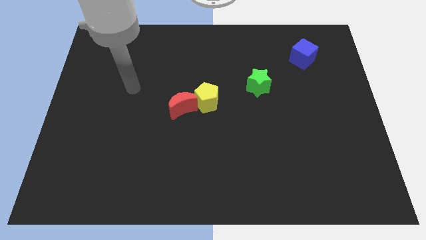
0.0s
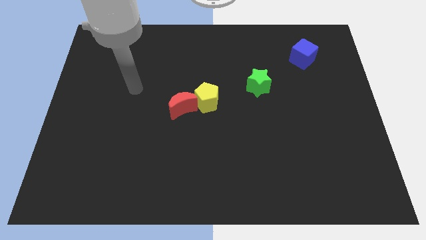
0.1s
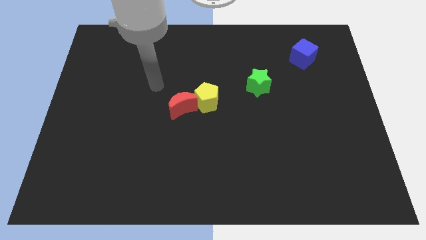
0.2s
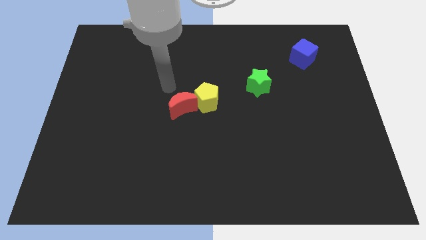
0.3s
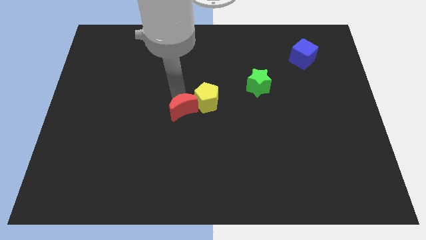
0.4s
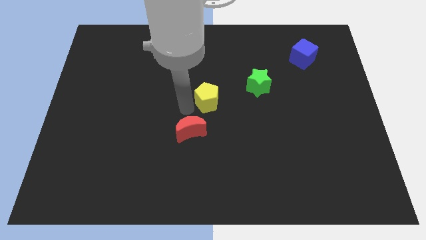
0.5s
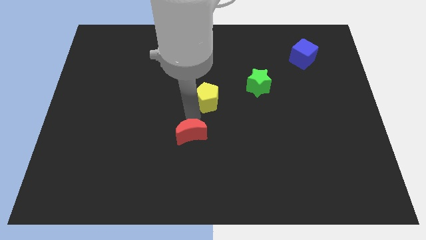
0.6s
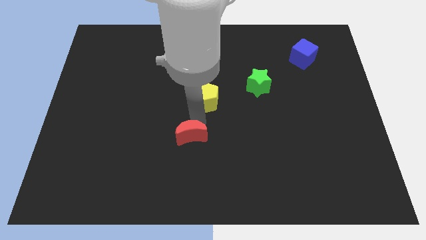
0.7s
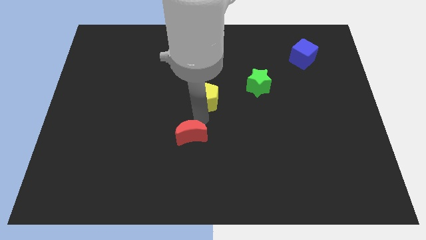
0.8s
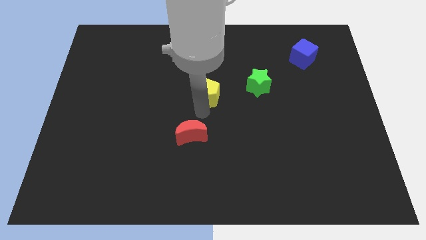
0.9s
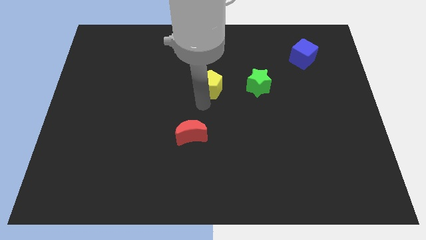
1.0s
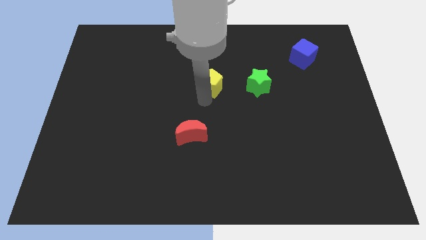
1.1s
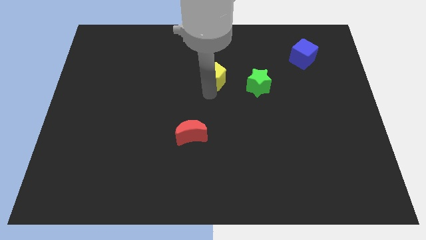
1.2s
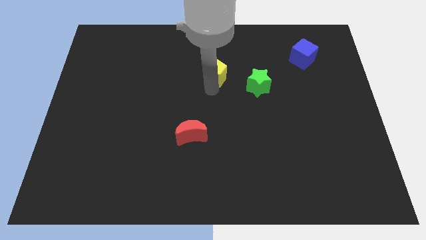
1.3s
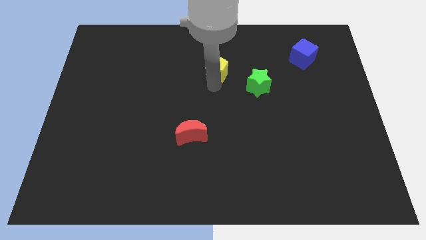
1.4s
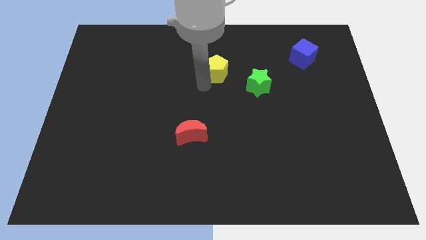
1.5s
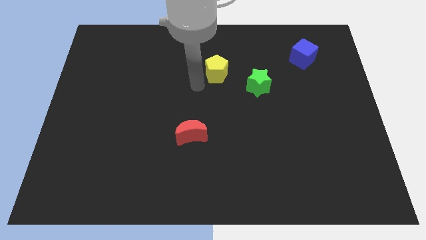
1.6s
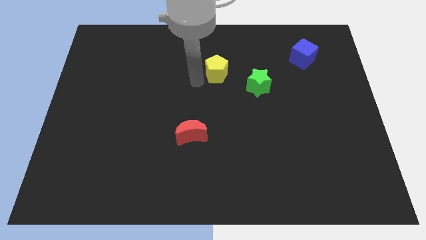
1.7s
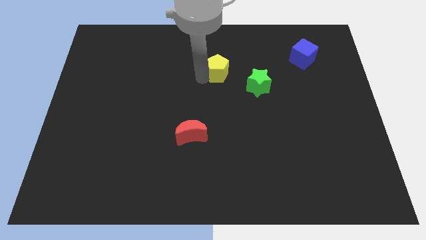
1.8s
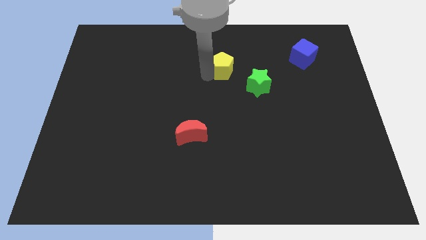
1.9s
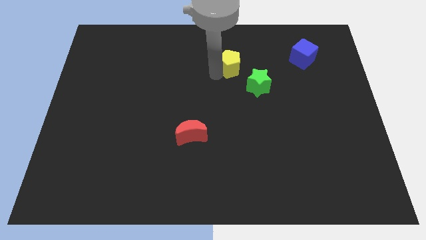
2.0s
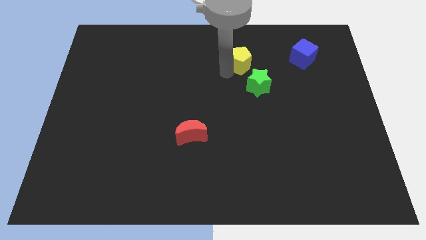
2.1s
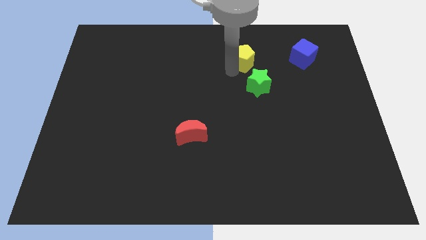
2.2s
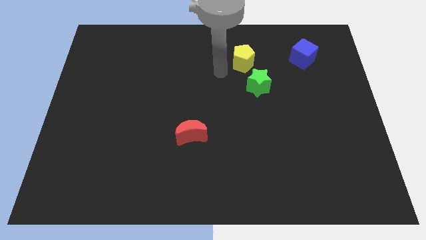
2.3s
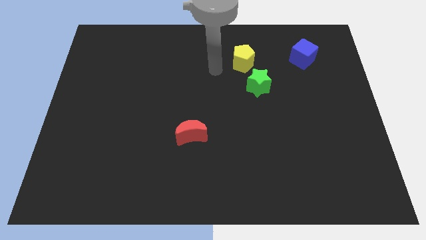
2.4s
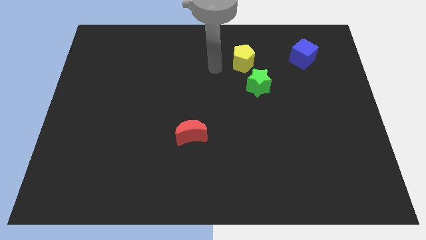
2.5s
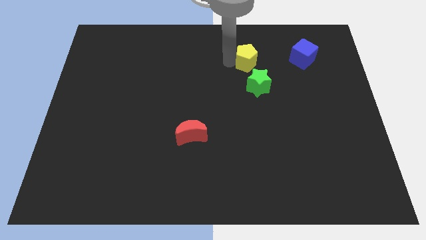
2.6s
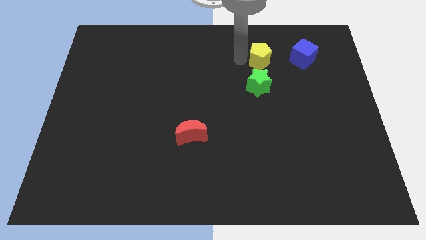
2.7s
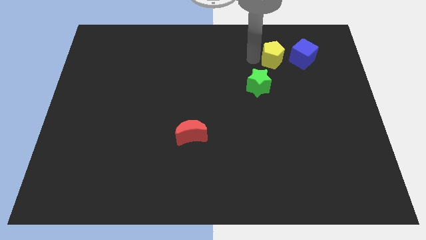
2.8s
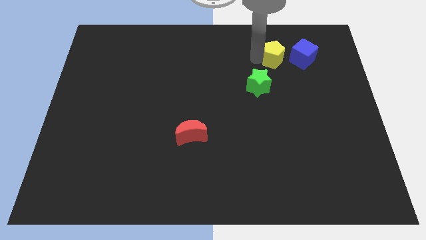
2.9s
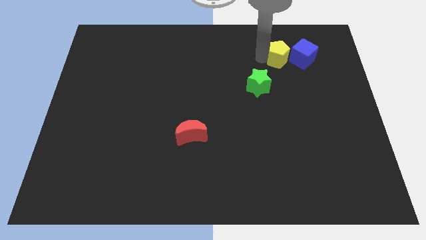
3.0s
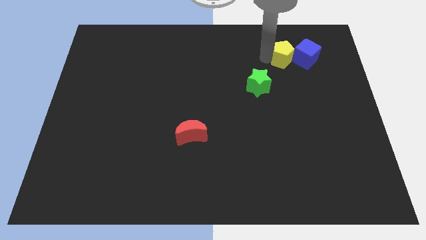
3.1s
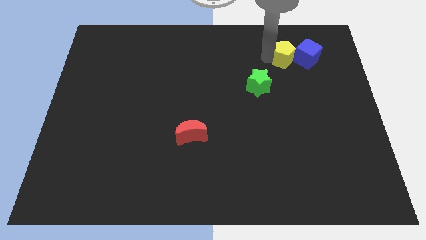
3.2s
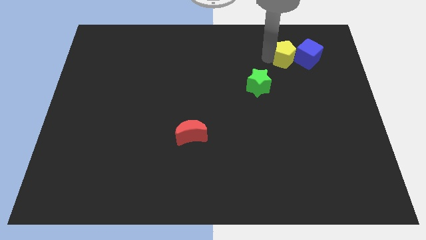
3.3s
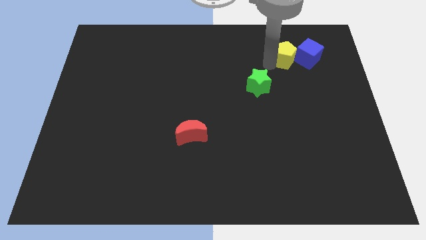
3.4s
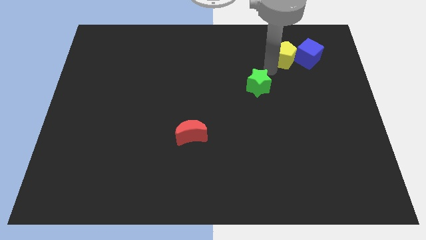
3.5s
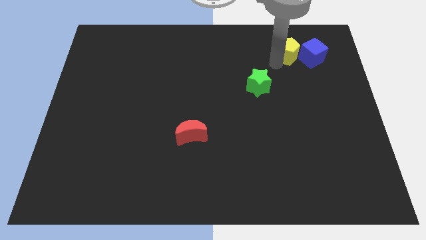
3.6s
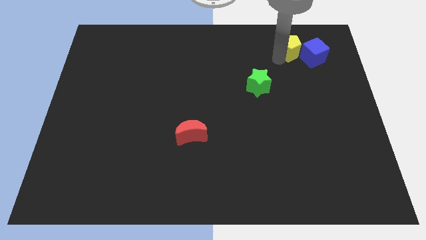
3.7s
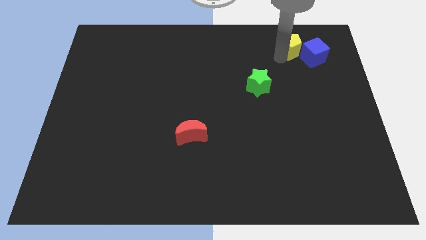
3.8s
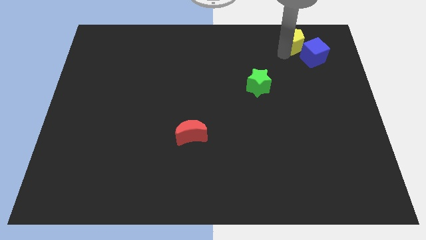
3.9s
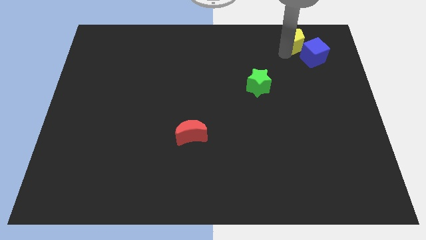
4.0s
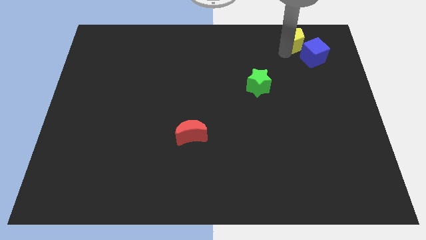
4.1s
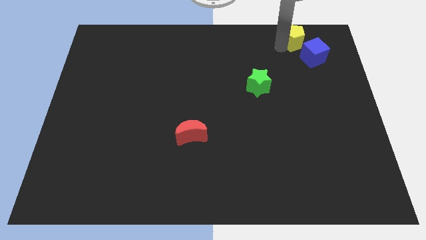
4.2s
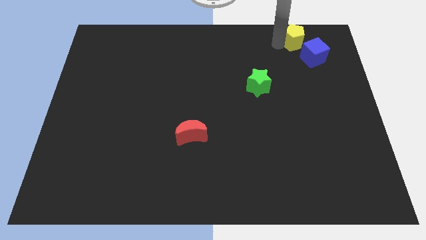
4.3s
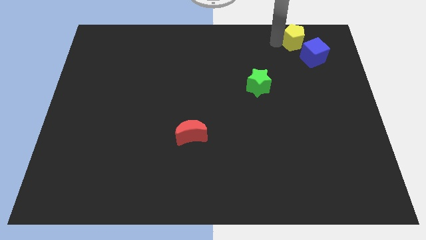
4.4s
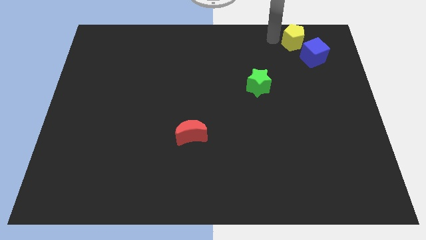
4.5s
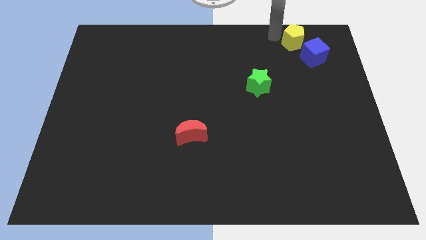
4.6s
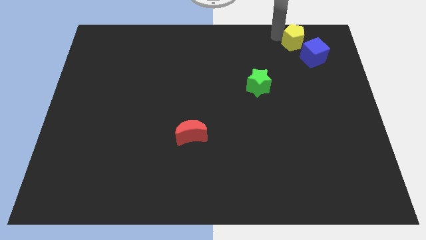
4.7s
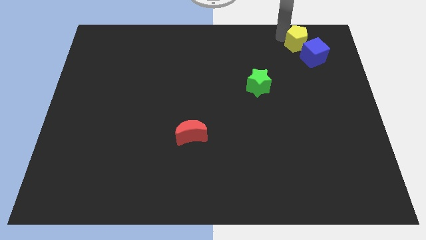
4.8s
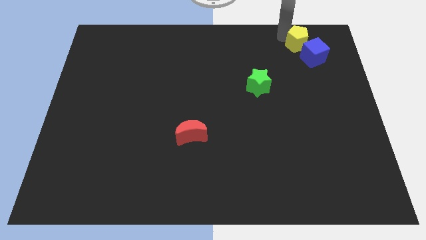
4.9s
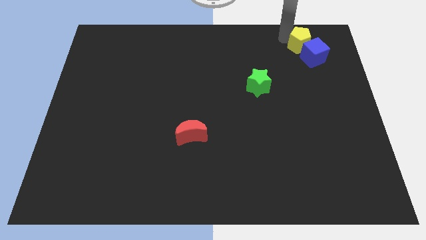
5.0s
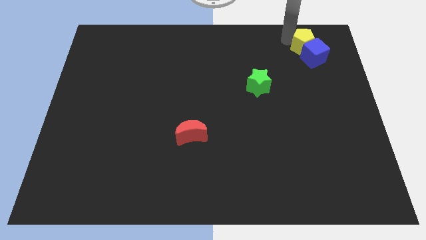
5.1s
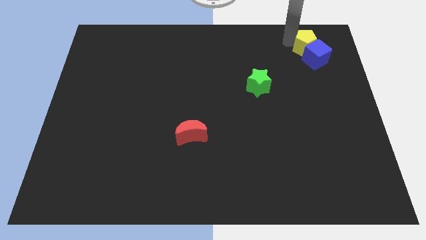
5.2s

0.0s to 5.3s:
put the yellow block close to the blue cube

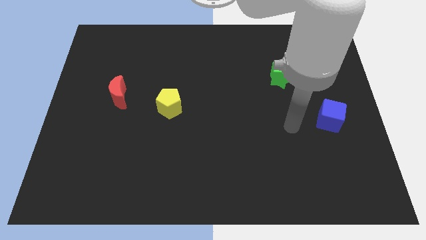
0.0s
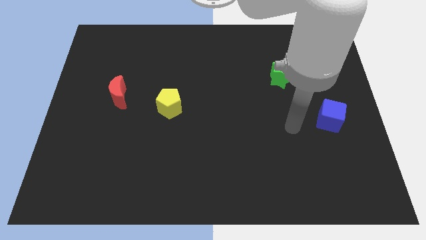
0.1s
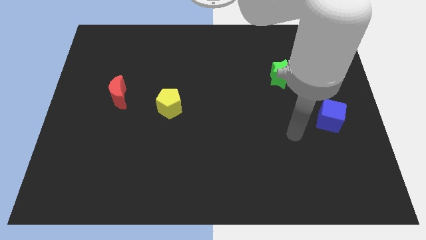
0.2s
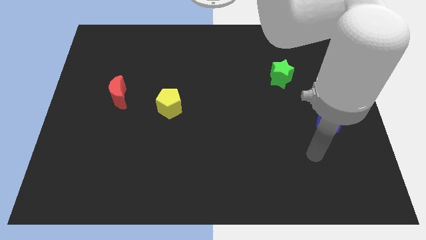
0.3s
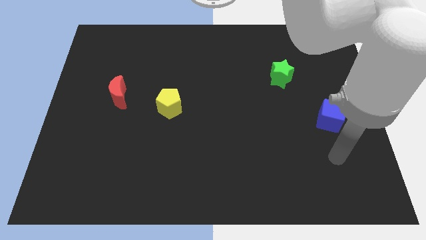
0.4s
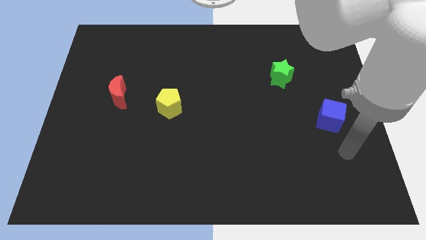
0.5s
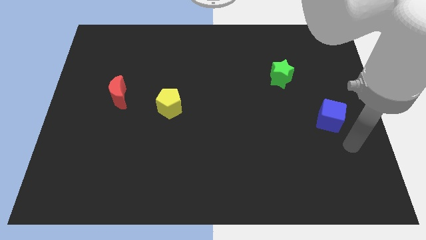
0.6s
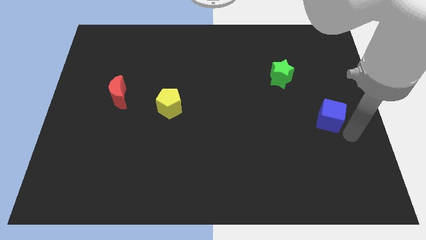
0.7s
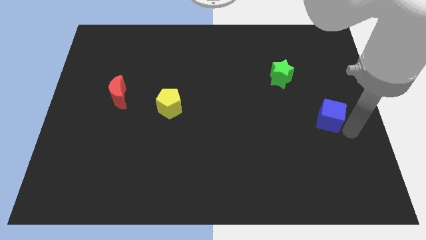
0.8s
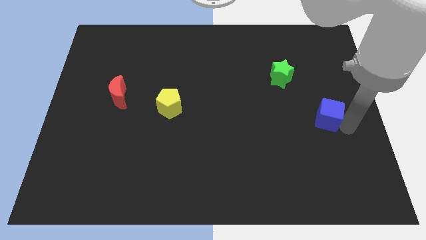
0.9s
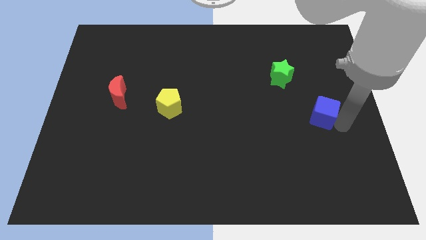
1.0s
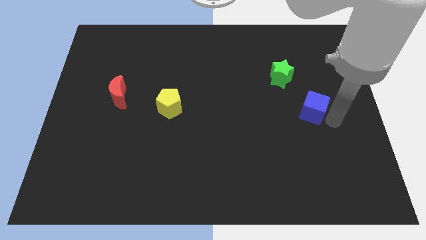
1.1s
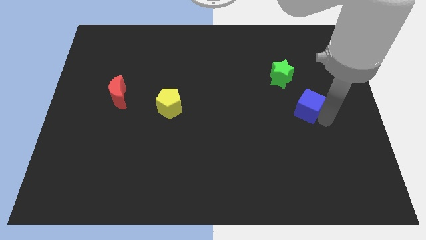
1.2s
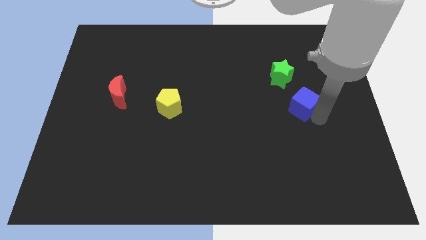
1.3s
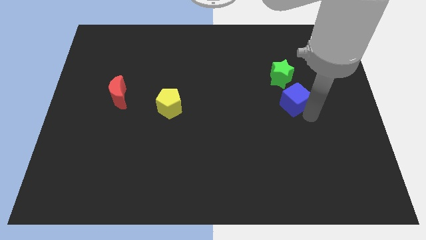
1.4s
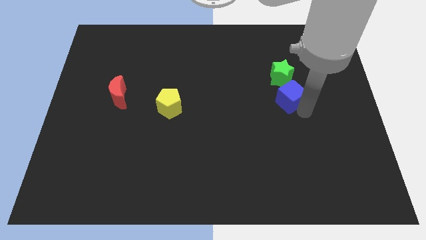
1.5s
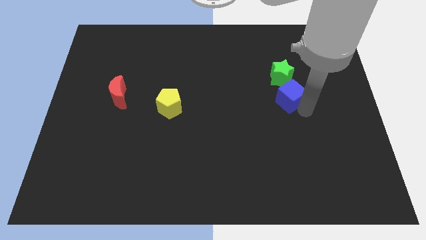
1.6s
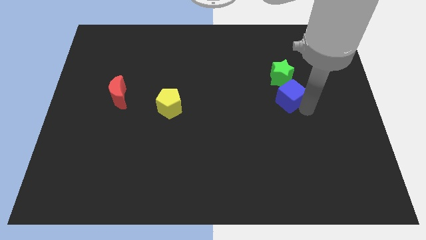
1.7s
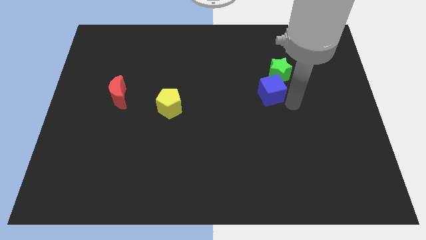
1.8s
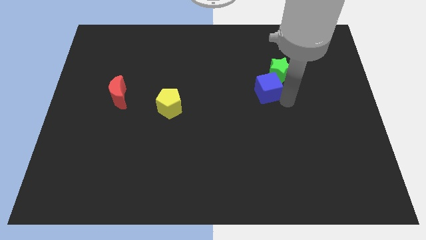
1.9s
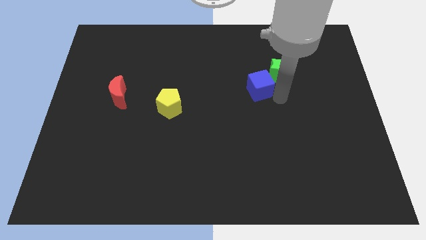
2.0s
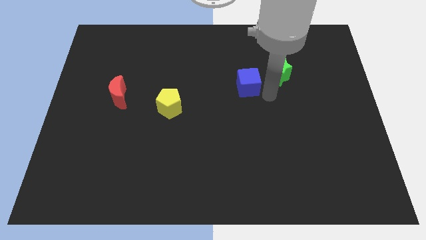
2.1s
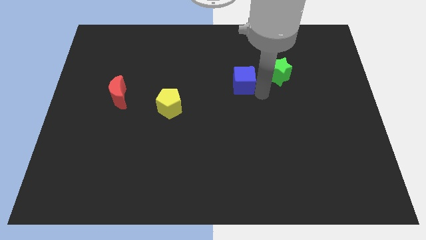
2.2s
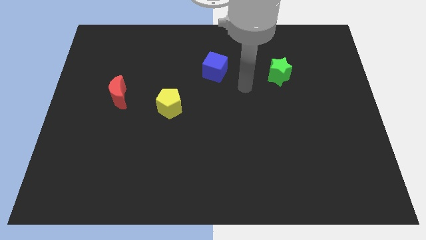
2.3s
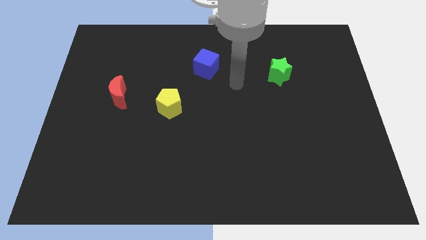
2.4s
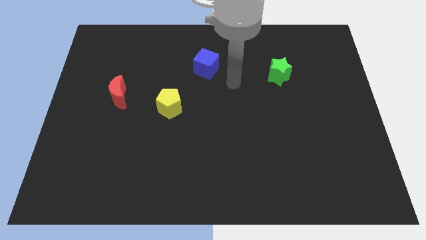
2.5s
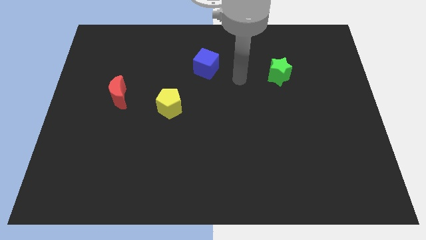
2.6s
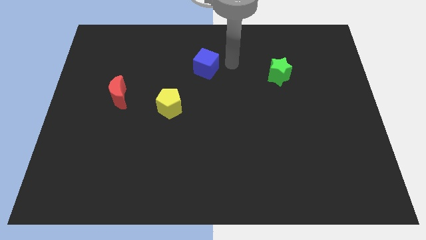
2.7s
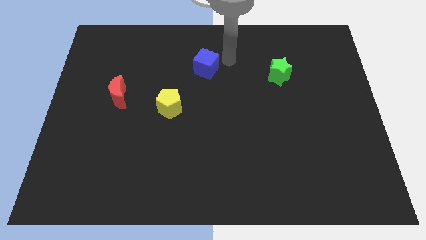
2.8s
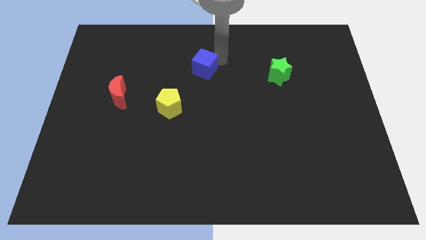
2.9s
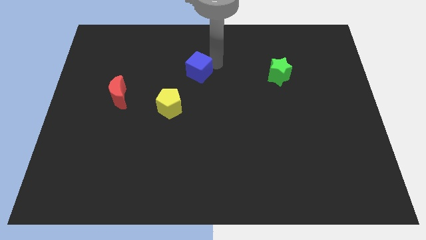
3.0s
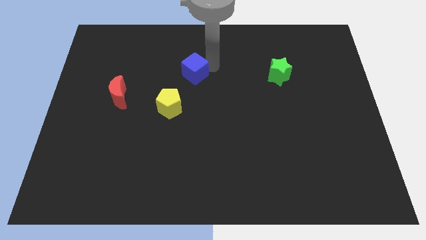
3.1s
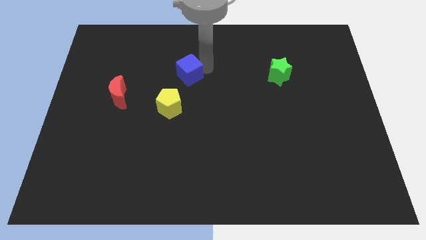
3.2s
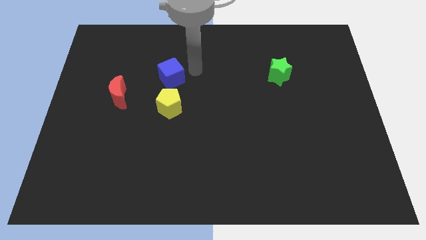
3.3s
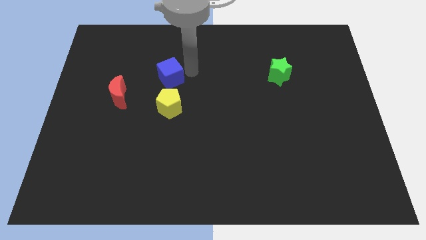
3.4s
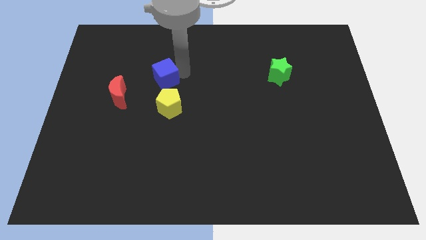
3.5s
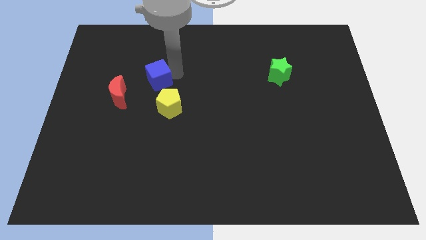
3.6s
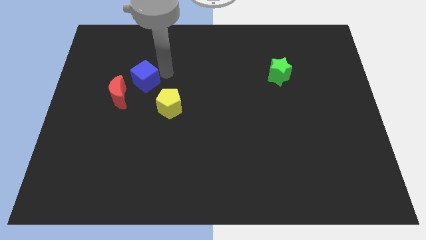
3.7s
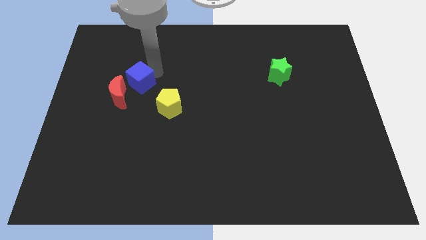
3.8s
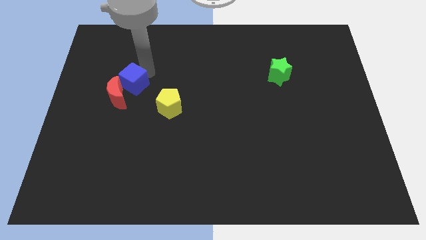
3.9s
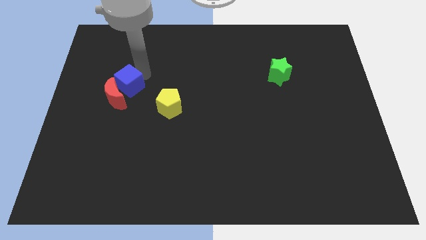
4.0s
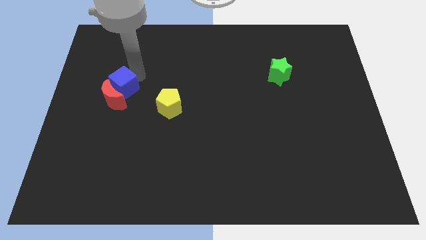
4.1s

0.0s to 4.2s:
move the blue block close to the moon
